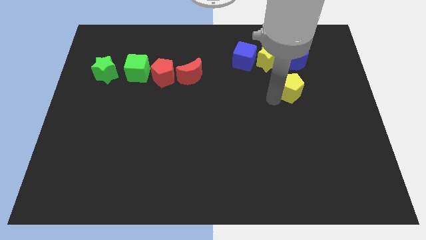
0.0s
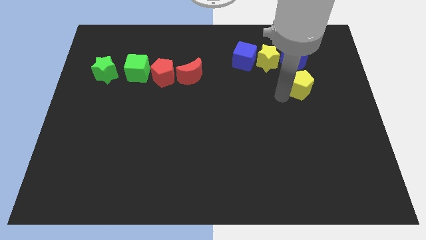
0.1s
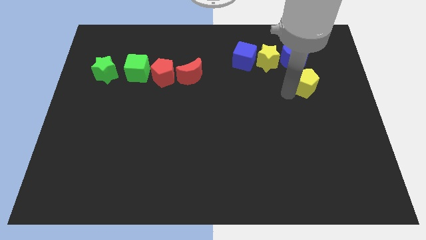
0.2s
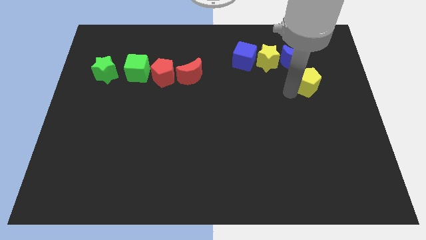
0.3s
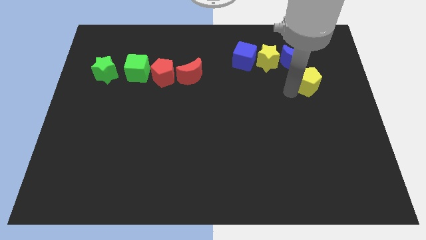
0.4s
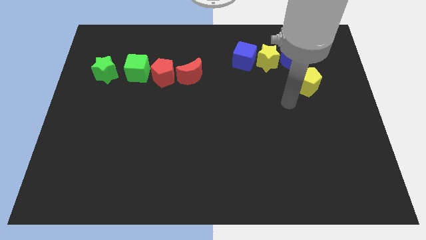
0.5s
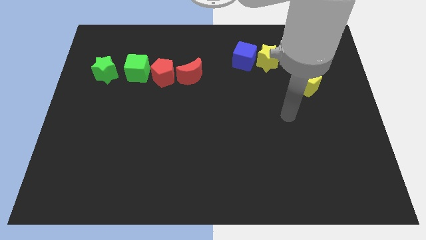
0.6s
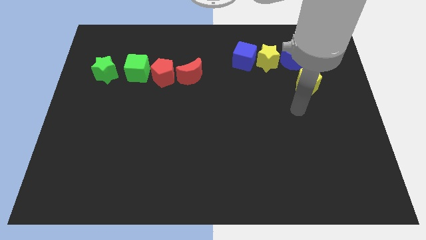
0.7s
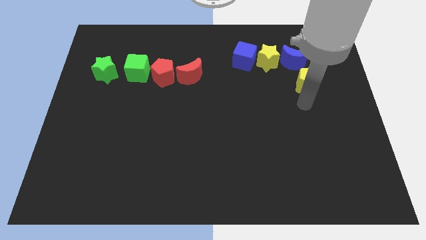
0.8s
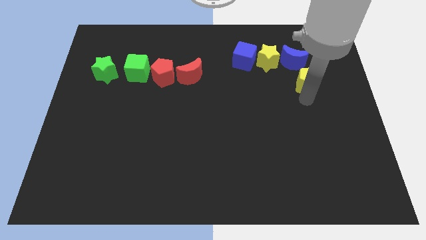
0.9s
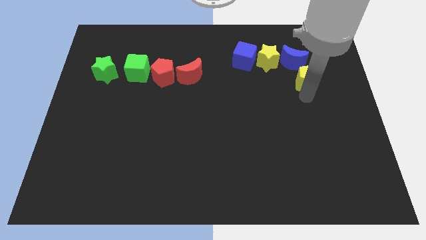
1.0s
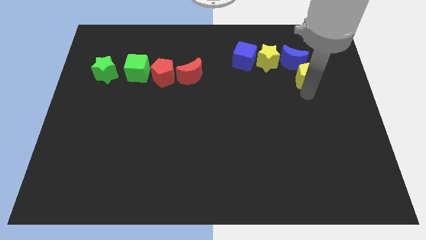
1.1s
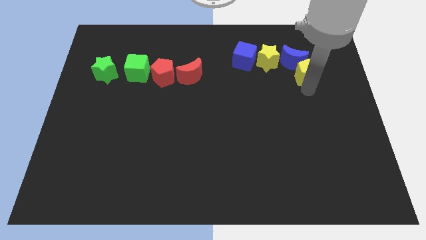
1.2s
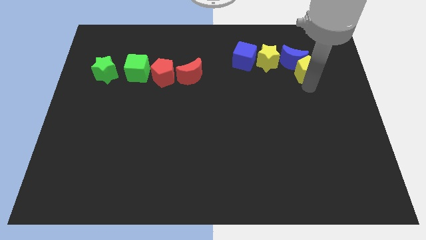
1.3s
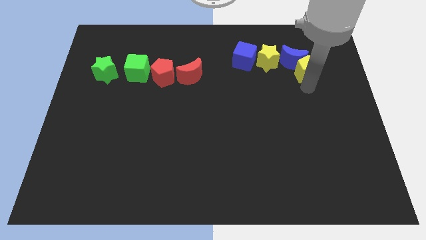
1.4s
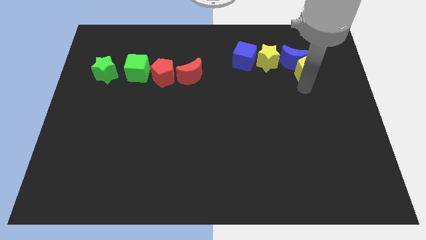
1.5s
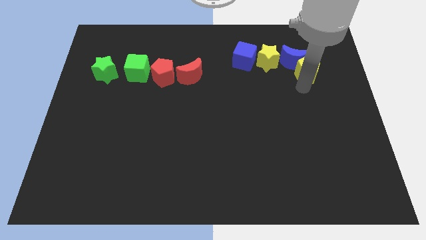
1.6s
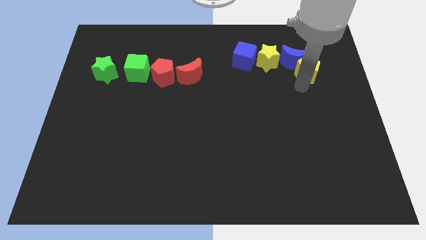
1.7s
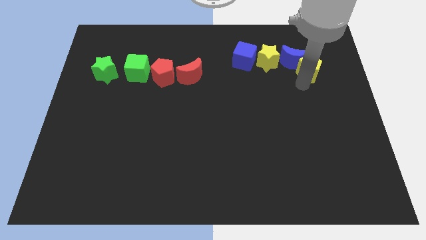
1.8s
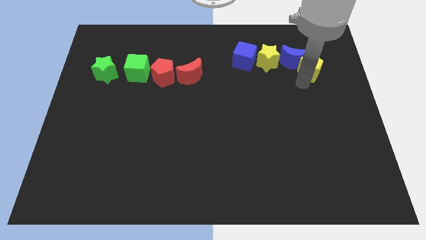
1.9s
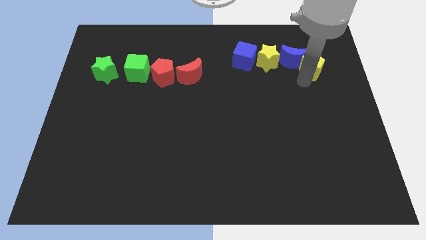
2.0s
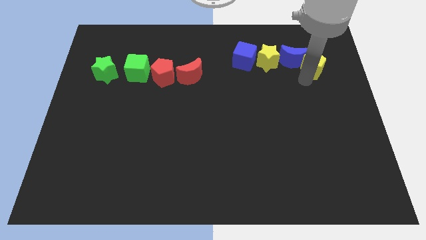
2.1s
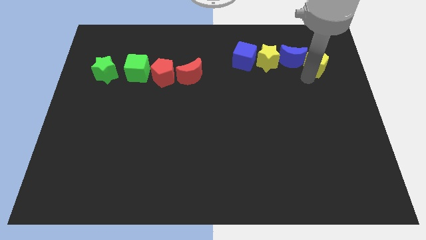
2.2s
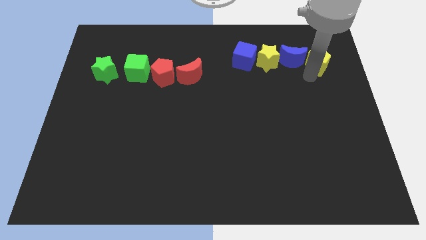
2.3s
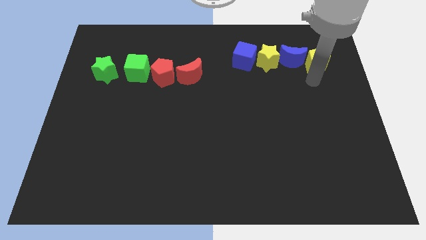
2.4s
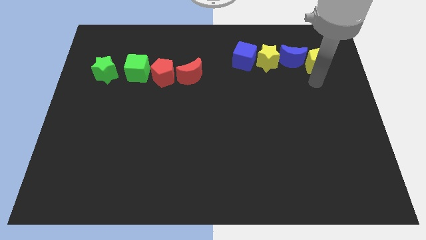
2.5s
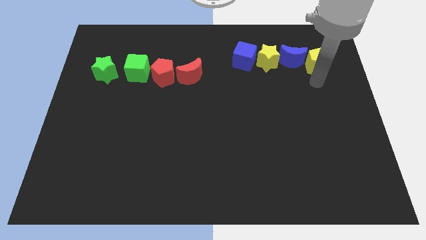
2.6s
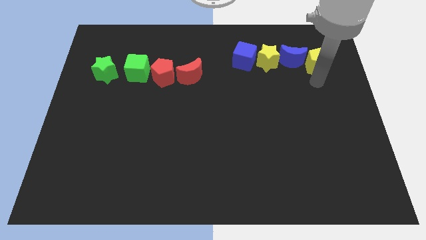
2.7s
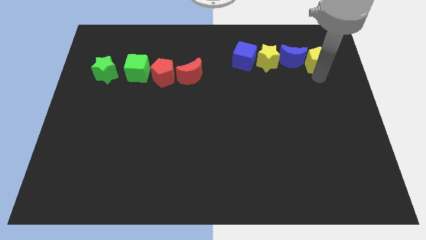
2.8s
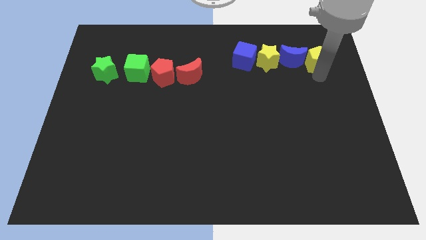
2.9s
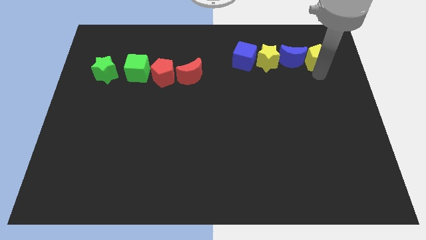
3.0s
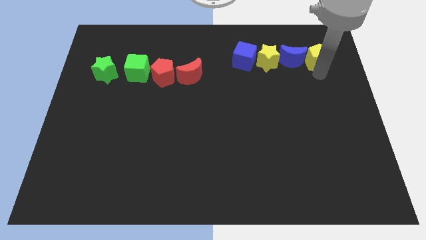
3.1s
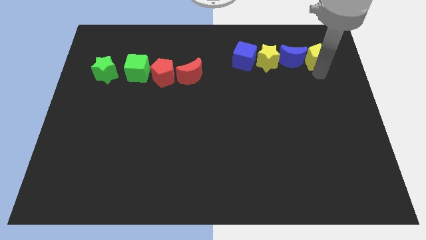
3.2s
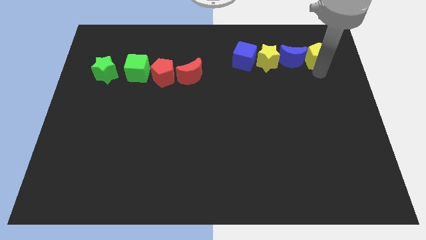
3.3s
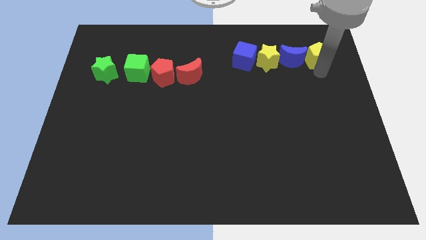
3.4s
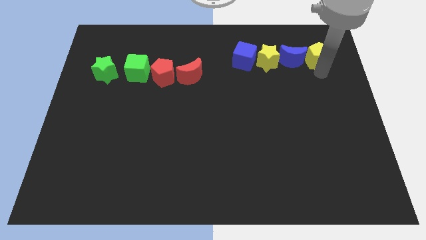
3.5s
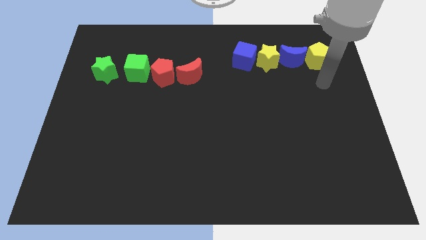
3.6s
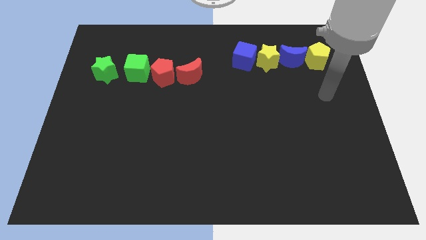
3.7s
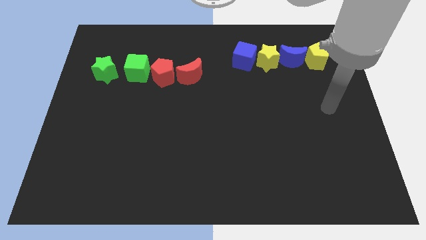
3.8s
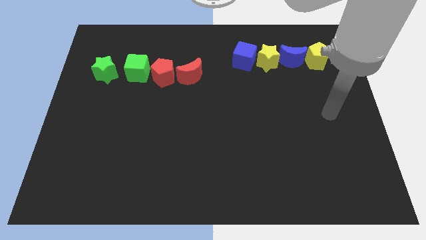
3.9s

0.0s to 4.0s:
push the yellow pentagon to the right side of the blue crescent

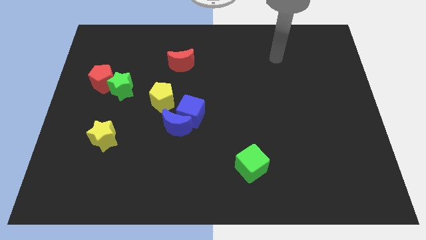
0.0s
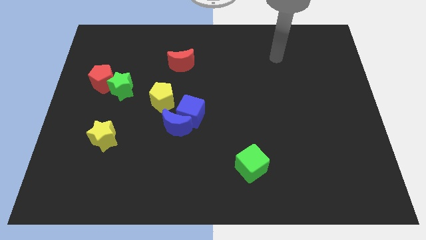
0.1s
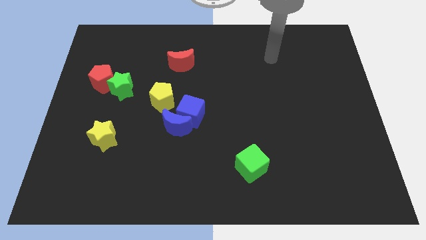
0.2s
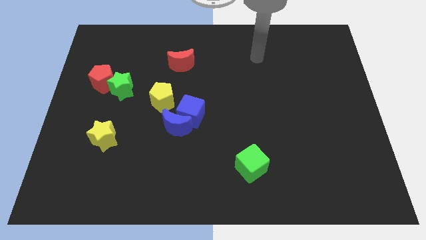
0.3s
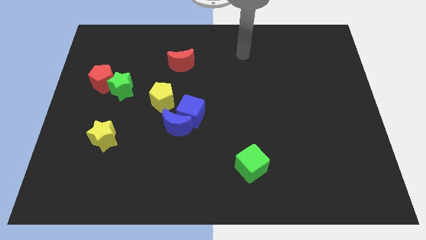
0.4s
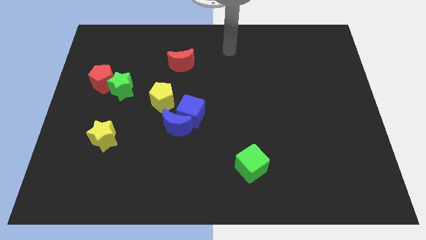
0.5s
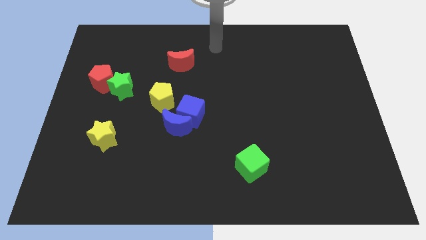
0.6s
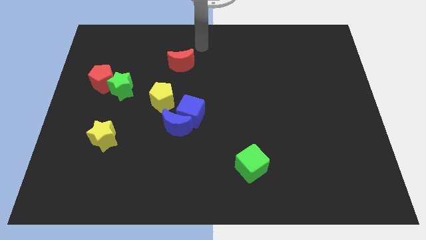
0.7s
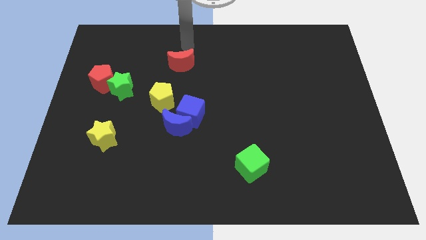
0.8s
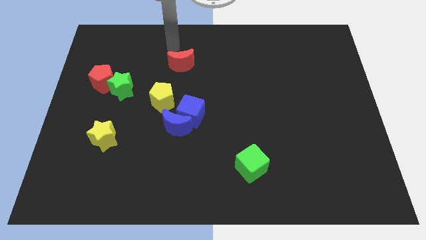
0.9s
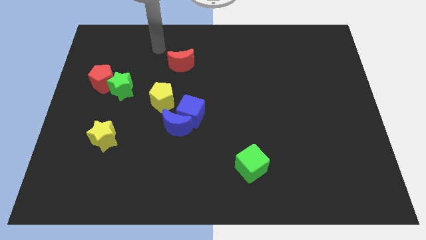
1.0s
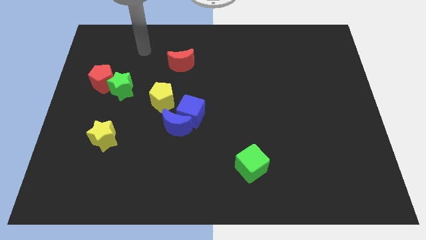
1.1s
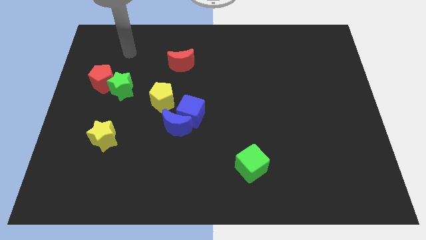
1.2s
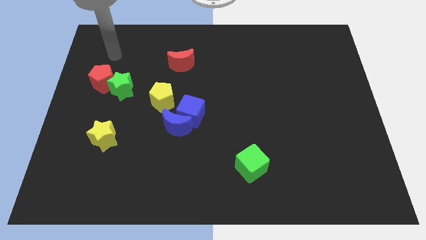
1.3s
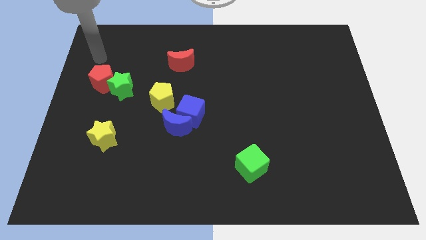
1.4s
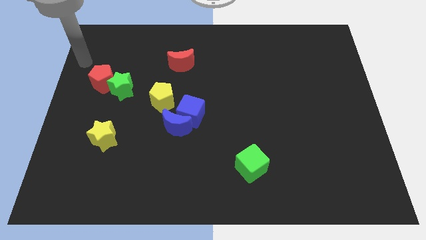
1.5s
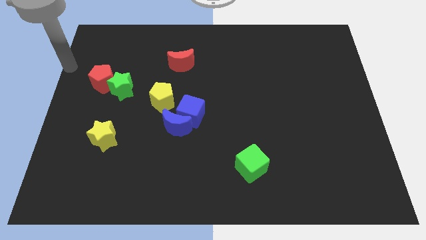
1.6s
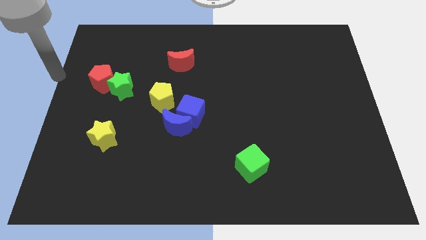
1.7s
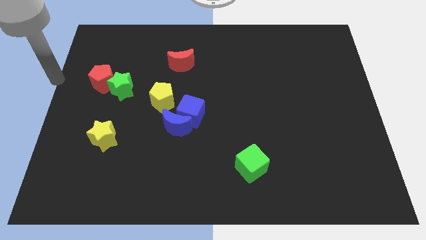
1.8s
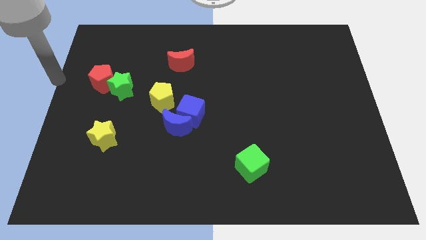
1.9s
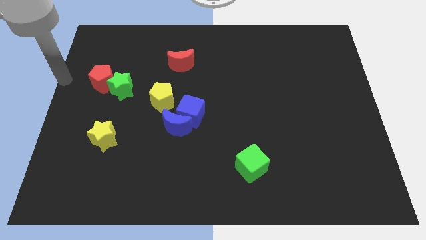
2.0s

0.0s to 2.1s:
slide your arm to the left of red pentagon

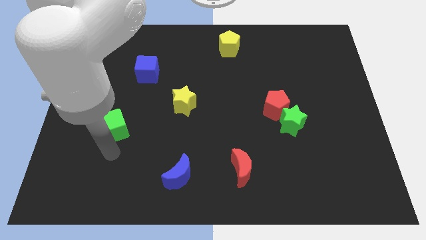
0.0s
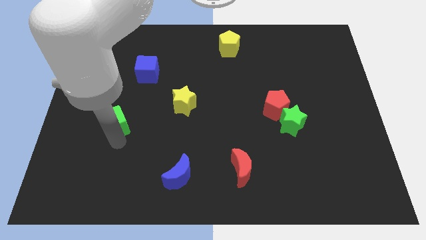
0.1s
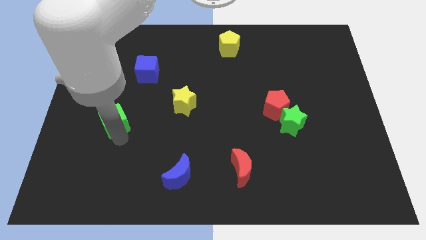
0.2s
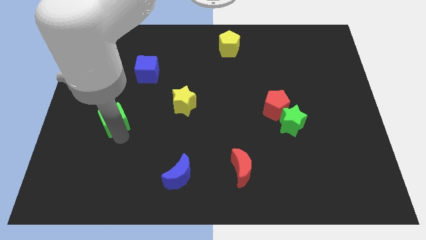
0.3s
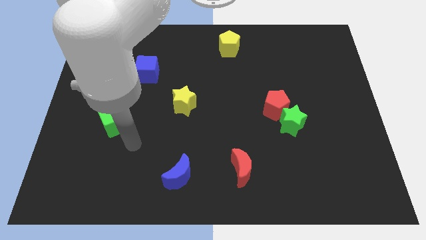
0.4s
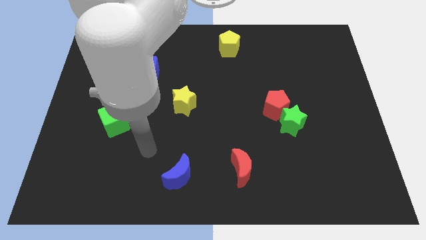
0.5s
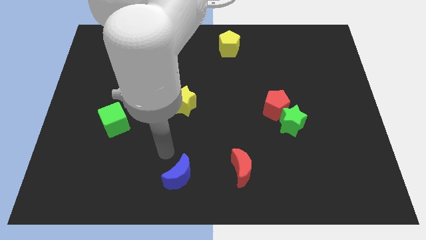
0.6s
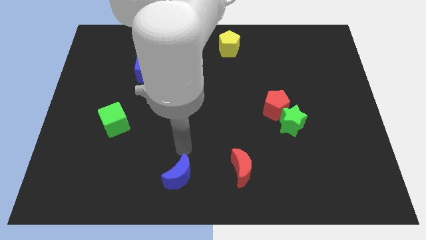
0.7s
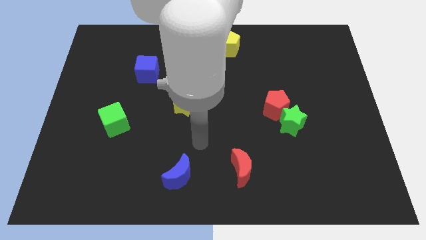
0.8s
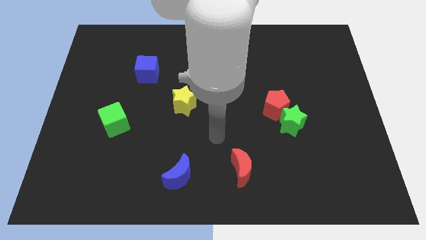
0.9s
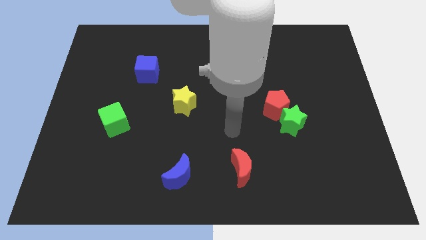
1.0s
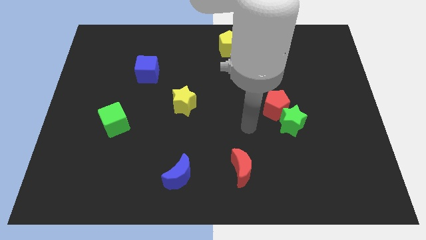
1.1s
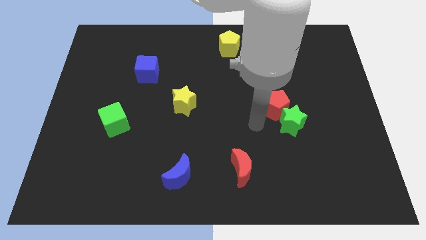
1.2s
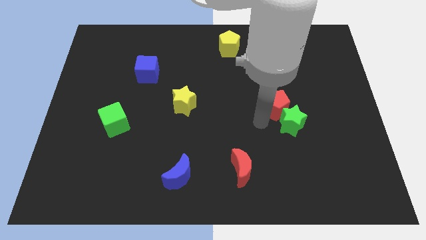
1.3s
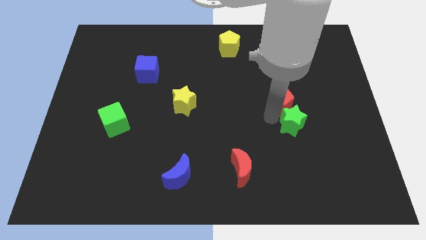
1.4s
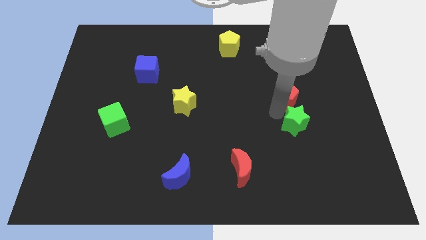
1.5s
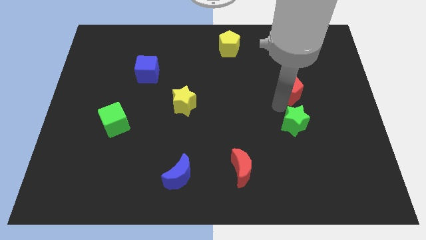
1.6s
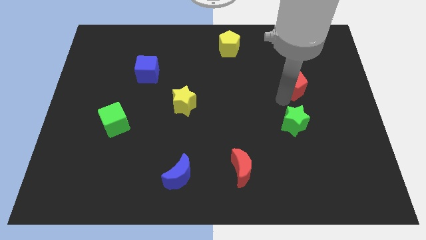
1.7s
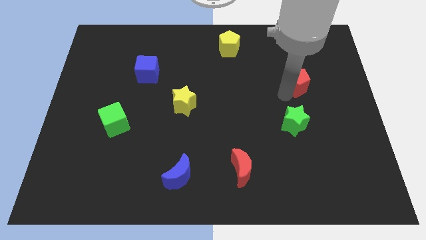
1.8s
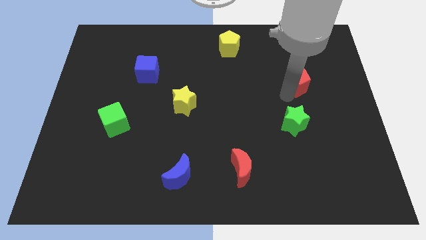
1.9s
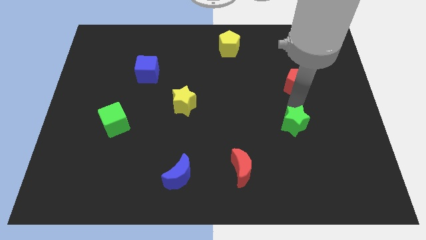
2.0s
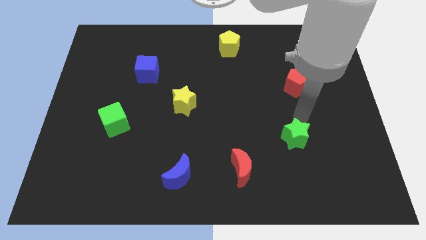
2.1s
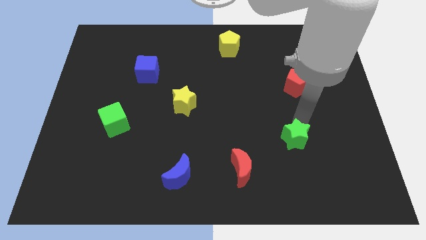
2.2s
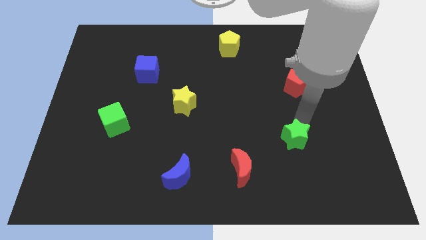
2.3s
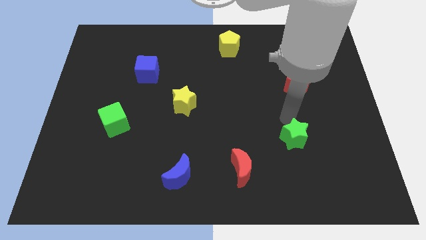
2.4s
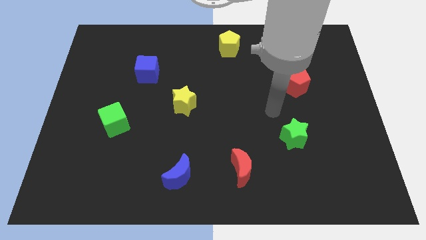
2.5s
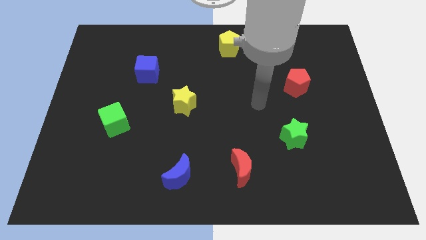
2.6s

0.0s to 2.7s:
push the green cube and separate the green star and red pentagon

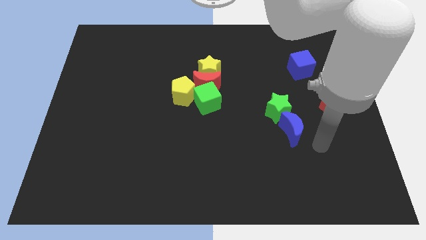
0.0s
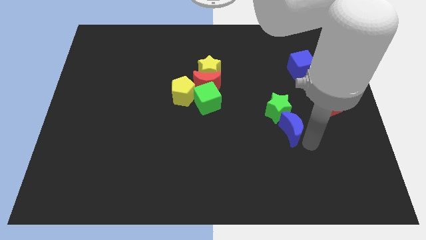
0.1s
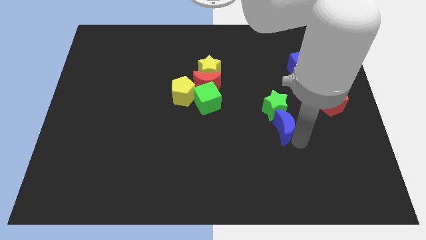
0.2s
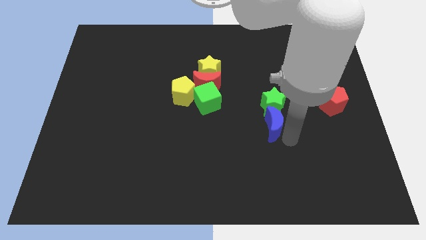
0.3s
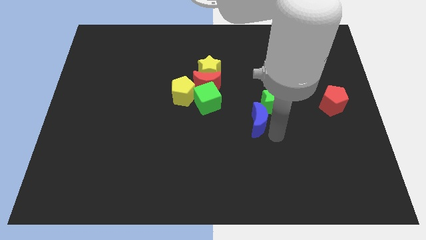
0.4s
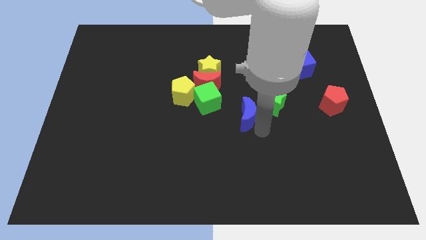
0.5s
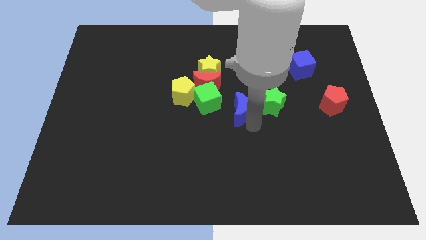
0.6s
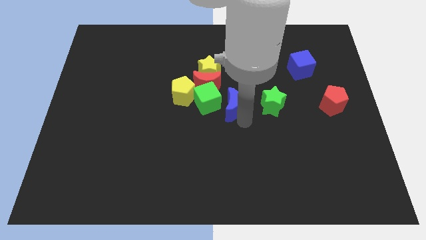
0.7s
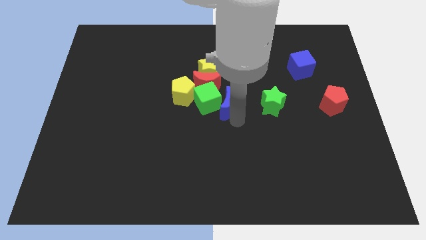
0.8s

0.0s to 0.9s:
separate the blue moon and green star
